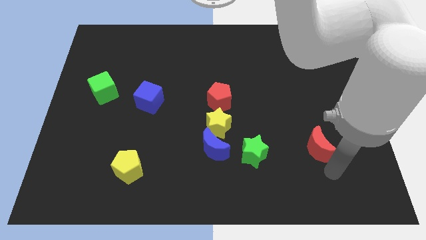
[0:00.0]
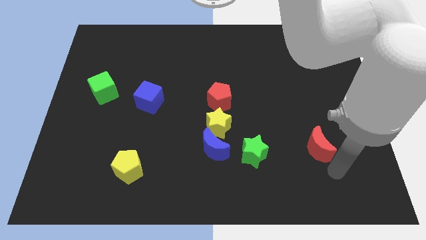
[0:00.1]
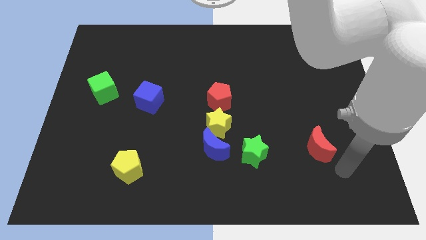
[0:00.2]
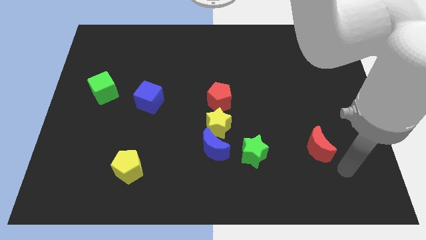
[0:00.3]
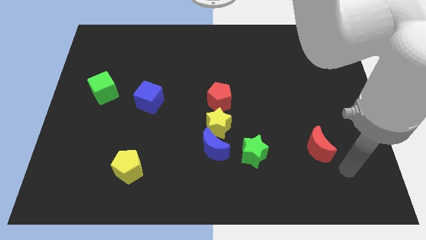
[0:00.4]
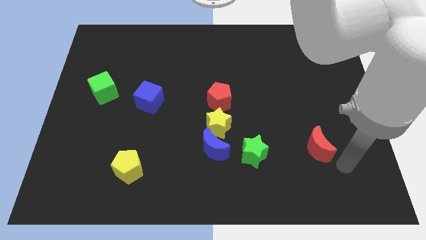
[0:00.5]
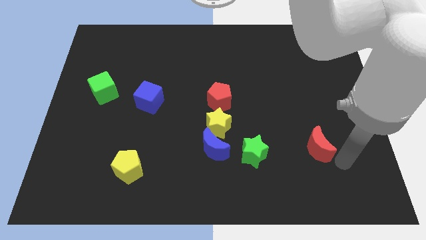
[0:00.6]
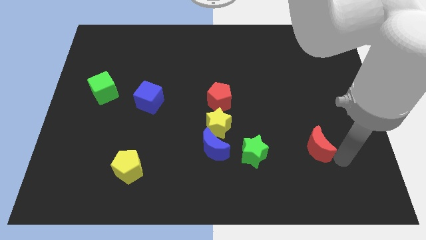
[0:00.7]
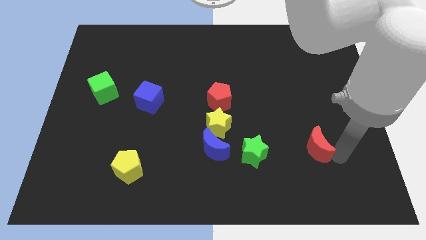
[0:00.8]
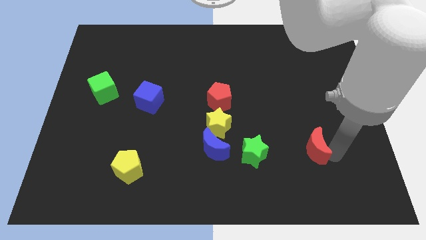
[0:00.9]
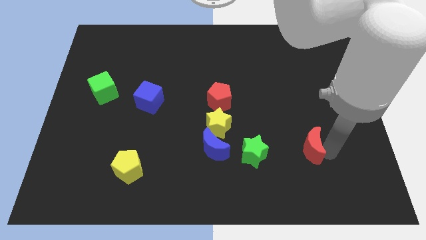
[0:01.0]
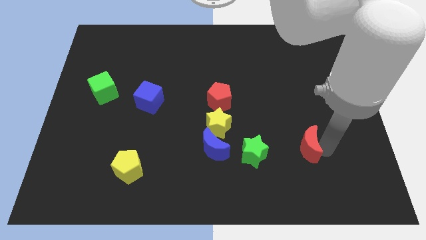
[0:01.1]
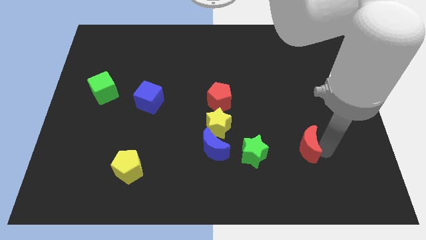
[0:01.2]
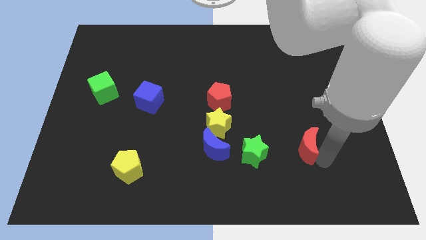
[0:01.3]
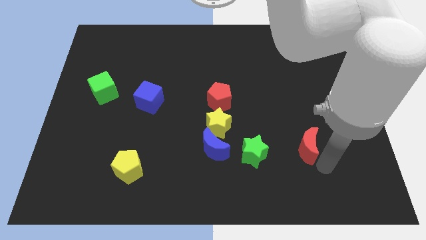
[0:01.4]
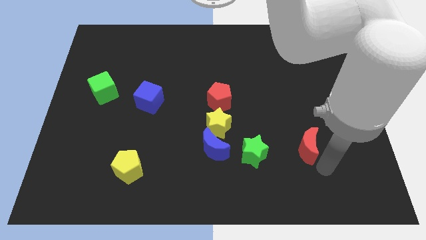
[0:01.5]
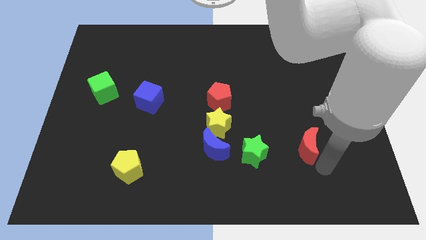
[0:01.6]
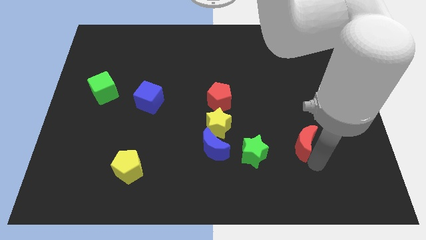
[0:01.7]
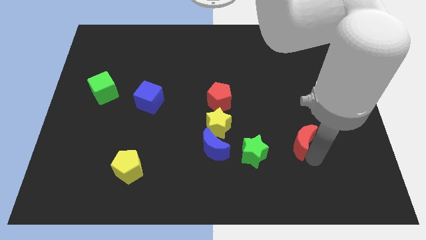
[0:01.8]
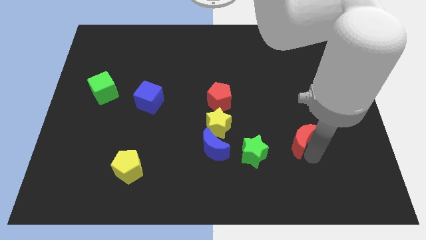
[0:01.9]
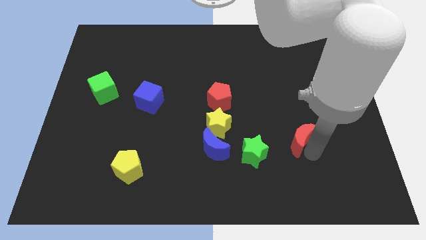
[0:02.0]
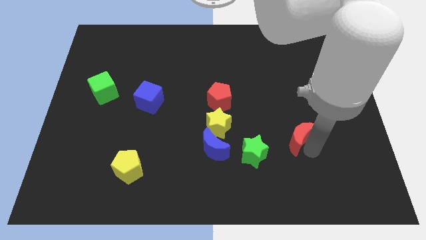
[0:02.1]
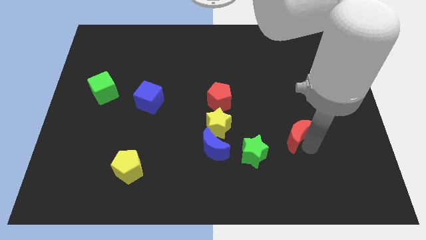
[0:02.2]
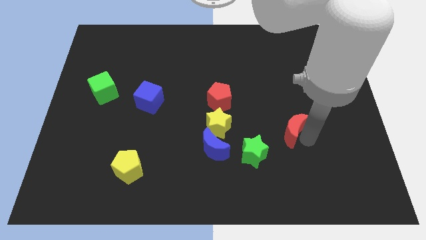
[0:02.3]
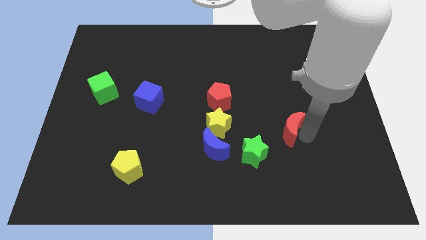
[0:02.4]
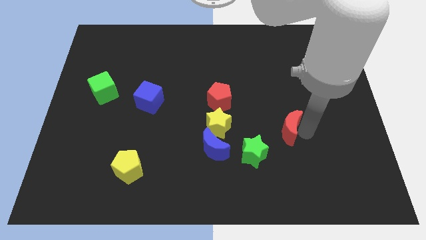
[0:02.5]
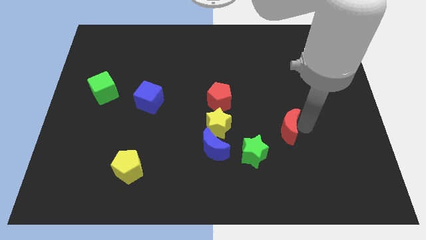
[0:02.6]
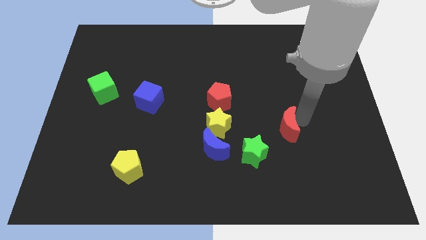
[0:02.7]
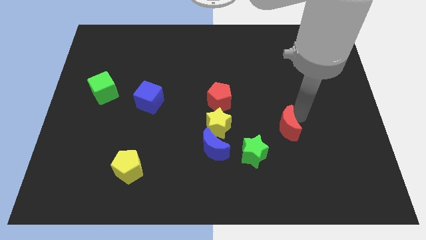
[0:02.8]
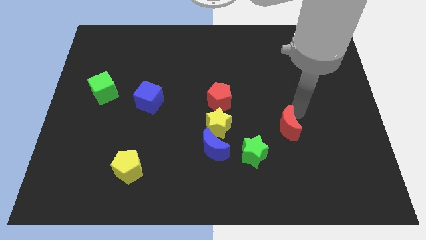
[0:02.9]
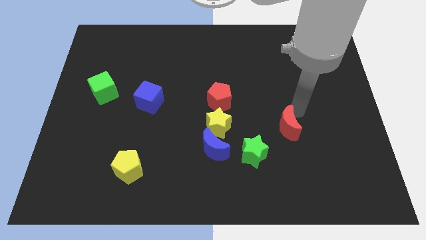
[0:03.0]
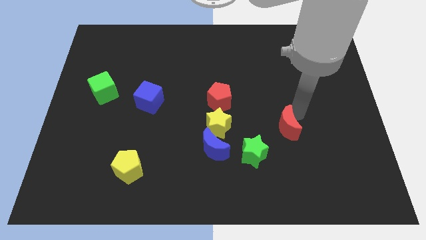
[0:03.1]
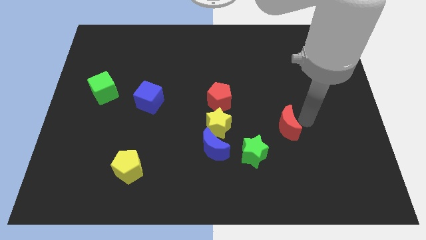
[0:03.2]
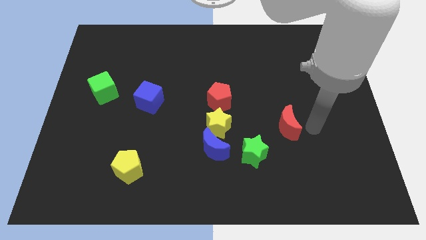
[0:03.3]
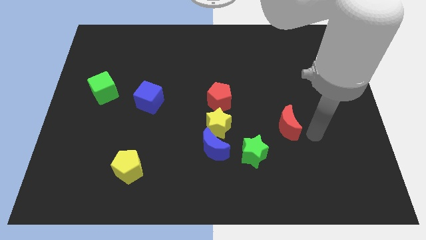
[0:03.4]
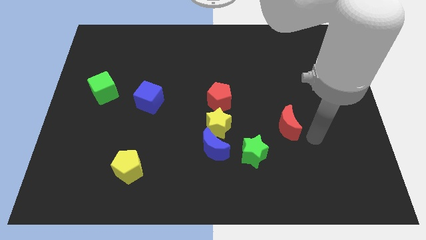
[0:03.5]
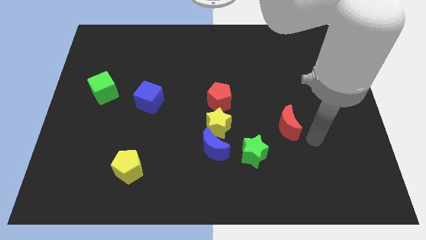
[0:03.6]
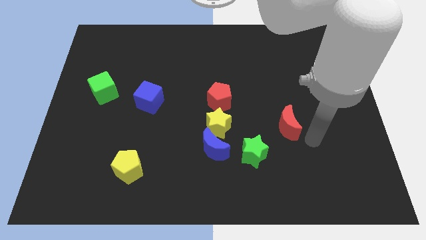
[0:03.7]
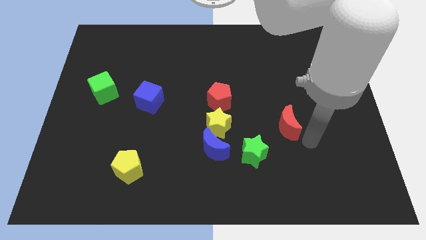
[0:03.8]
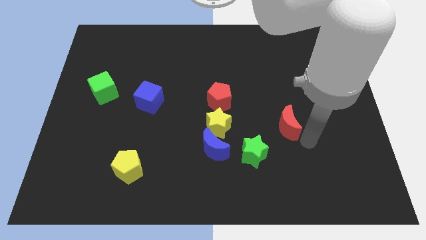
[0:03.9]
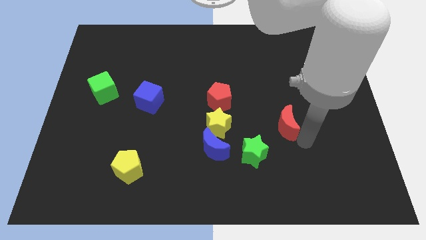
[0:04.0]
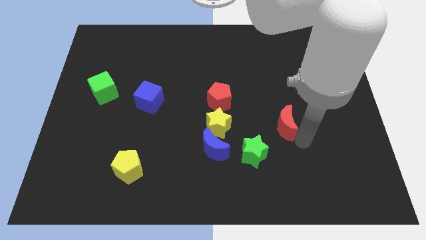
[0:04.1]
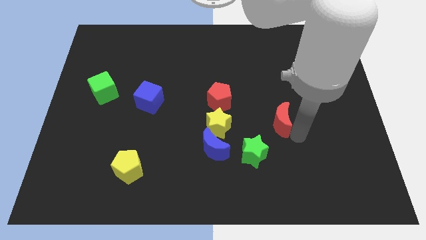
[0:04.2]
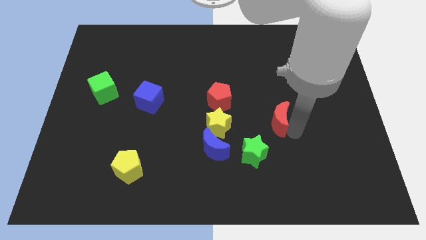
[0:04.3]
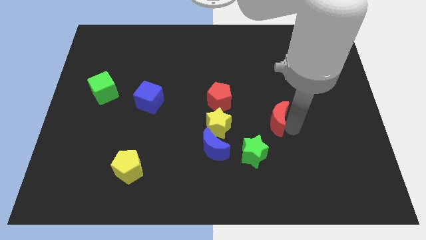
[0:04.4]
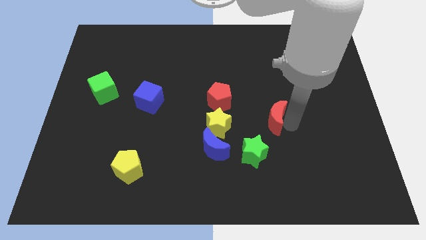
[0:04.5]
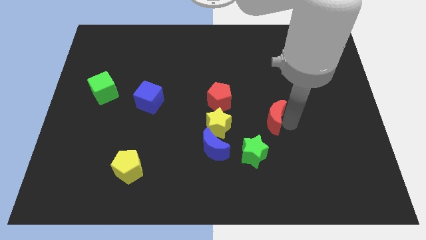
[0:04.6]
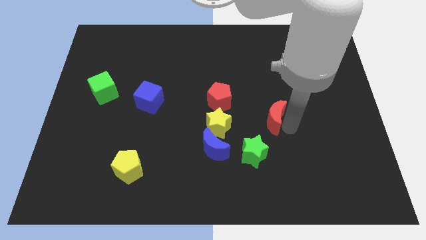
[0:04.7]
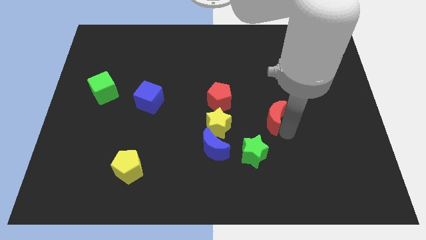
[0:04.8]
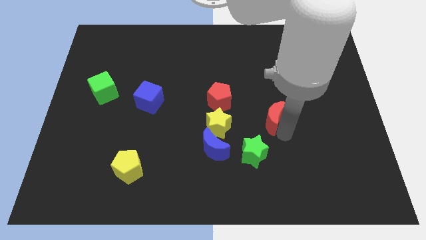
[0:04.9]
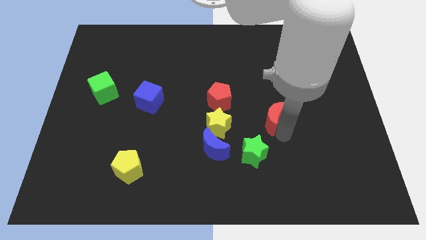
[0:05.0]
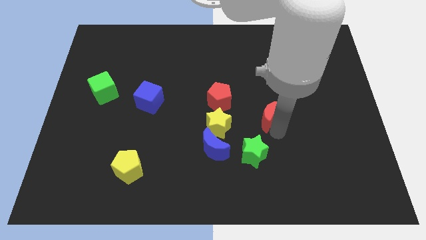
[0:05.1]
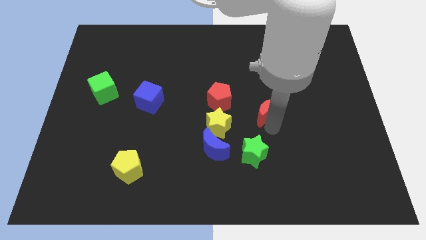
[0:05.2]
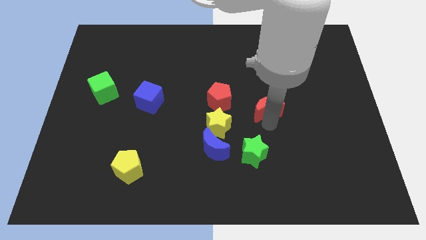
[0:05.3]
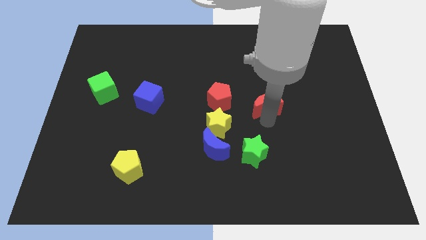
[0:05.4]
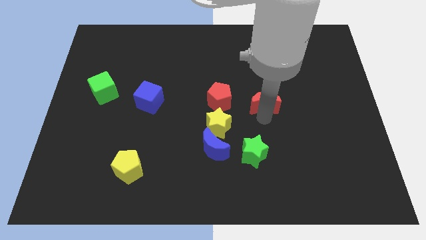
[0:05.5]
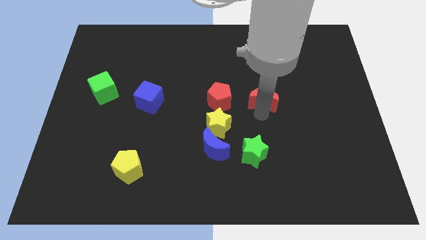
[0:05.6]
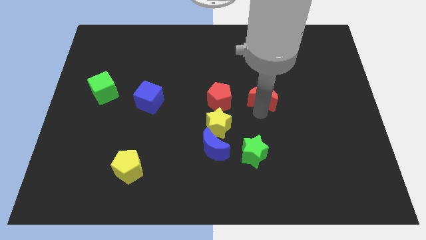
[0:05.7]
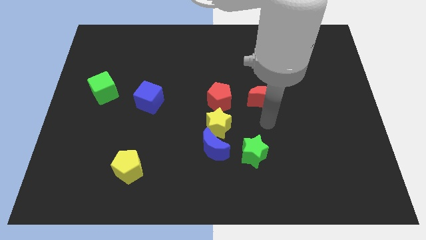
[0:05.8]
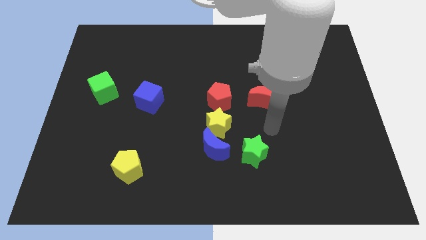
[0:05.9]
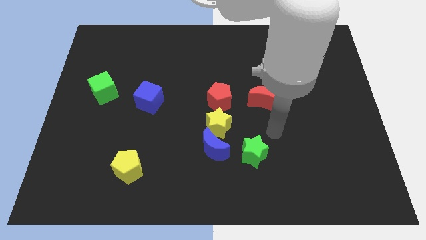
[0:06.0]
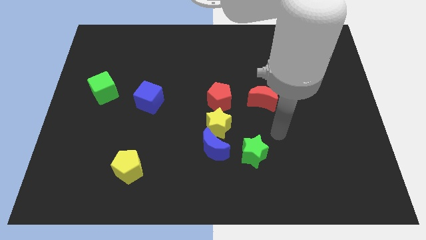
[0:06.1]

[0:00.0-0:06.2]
push the red crescent to the right side of red pentagon

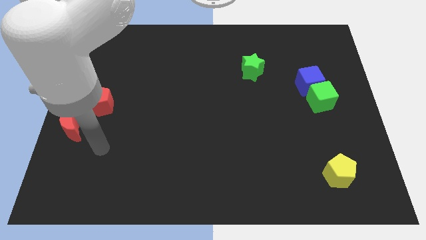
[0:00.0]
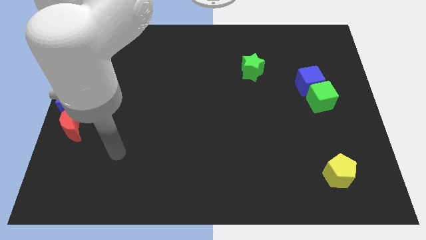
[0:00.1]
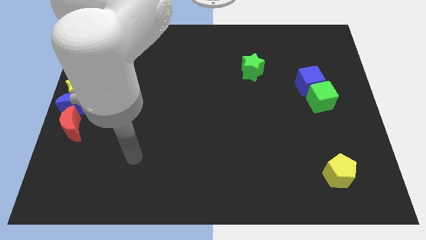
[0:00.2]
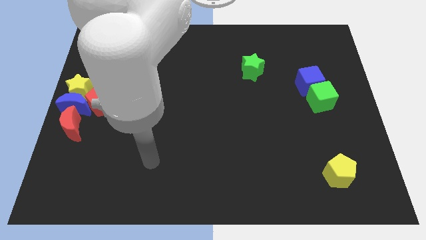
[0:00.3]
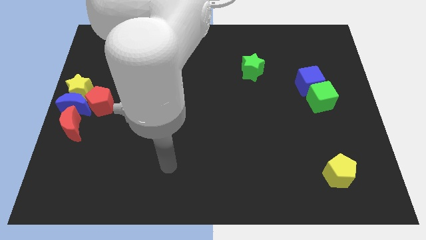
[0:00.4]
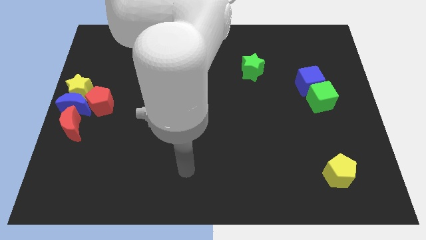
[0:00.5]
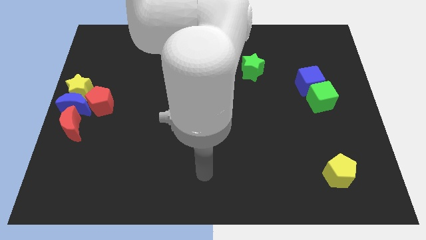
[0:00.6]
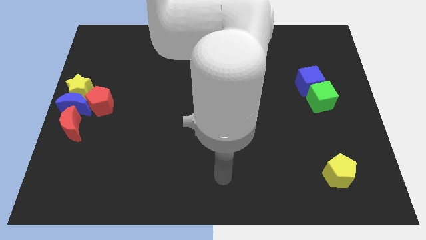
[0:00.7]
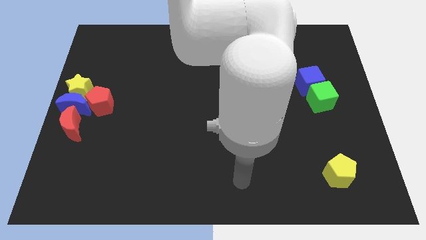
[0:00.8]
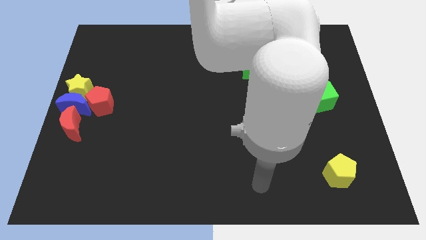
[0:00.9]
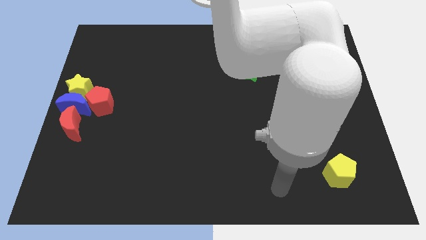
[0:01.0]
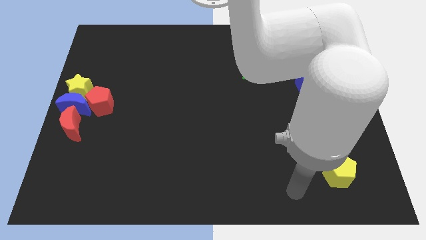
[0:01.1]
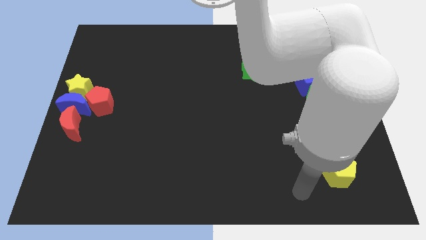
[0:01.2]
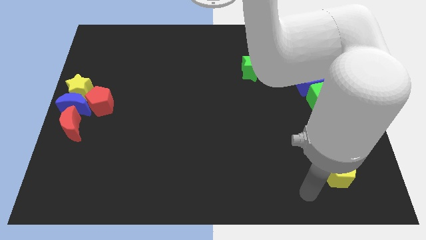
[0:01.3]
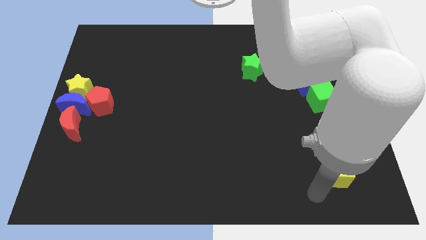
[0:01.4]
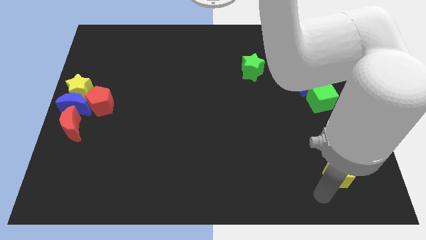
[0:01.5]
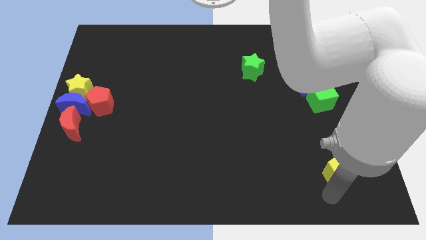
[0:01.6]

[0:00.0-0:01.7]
move yourself away from the red moon

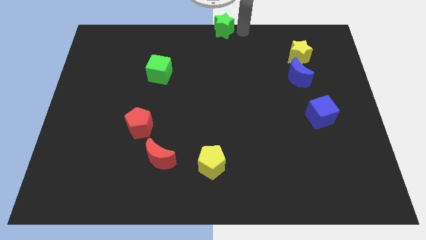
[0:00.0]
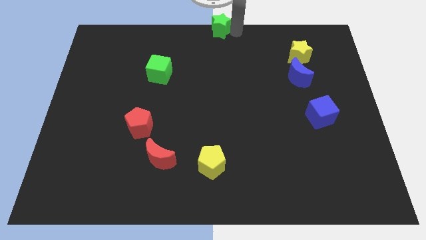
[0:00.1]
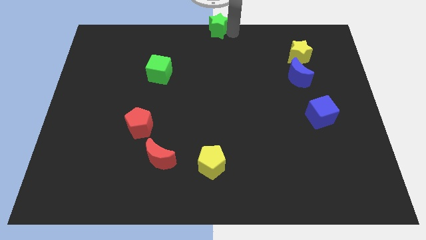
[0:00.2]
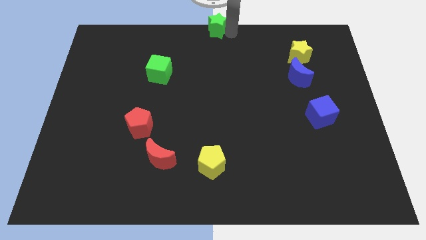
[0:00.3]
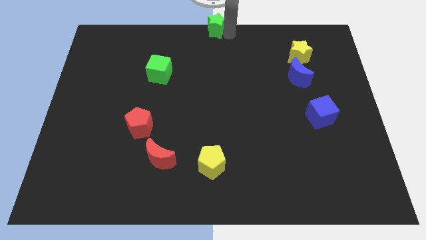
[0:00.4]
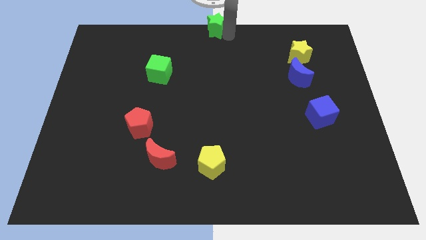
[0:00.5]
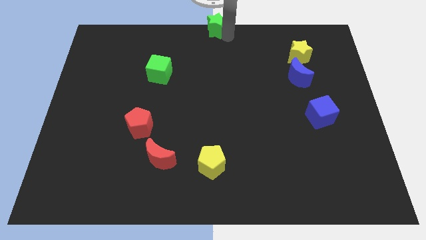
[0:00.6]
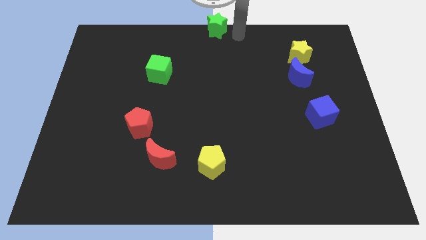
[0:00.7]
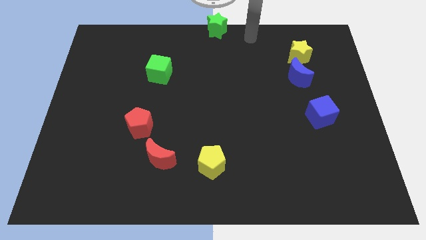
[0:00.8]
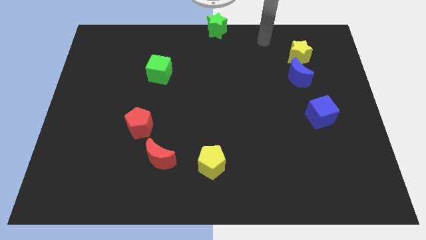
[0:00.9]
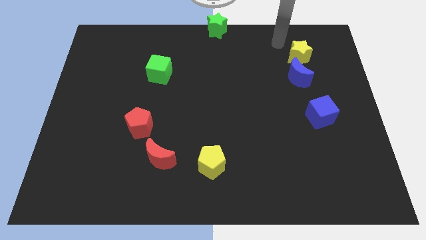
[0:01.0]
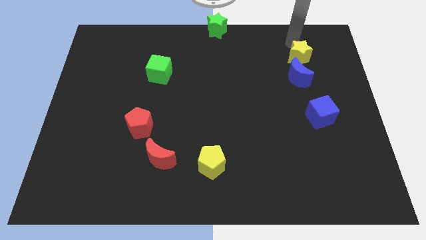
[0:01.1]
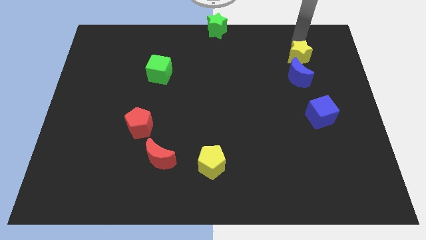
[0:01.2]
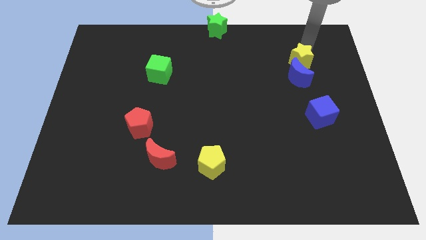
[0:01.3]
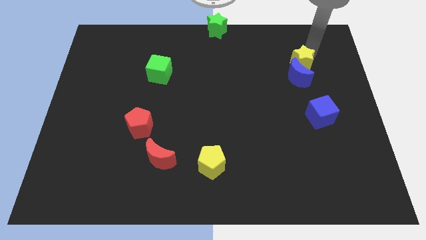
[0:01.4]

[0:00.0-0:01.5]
push yellow star into blue moon
